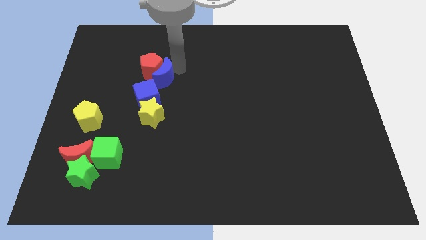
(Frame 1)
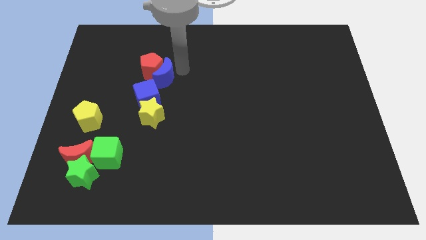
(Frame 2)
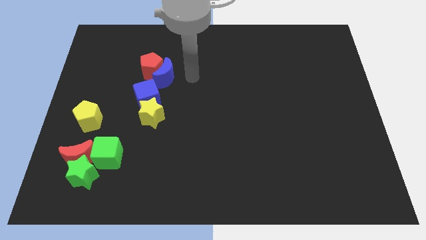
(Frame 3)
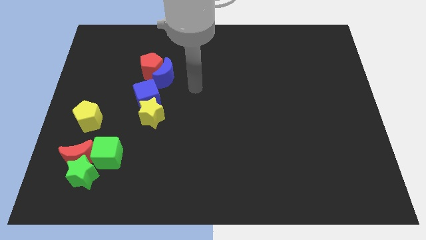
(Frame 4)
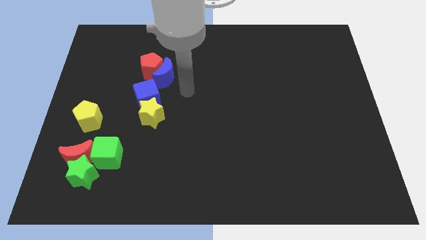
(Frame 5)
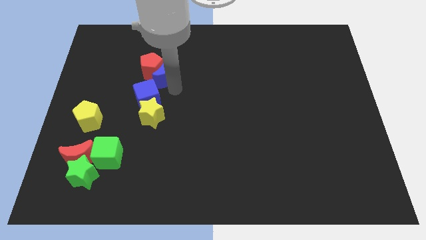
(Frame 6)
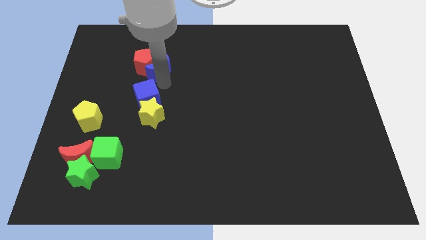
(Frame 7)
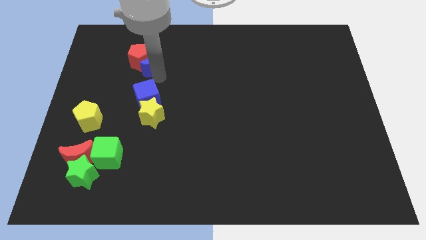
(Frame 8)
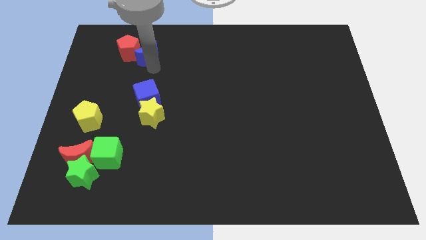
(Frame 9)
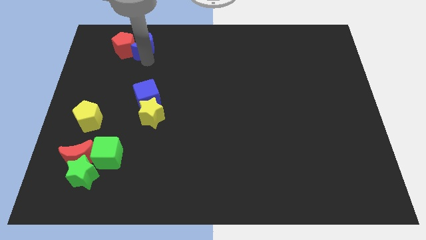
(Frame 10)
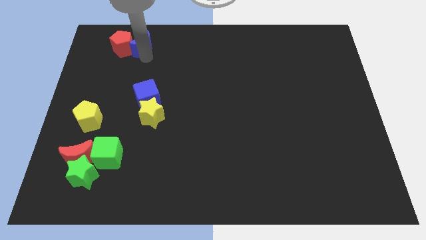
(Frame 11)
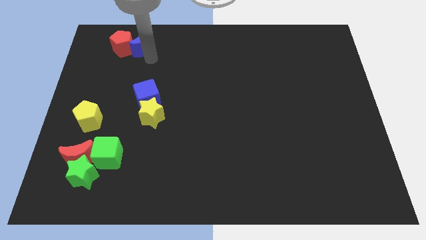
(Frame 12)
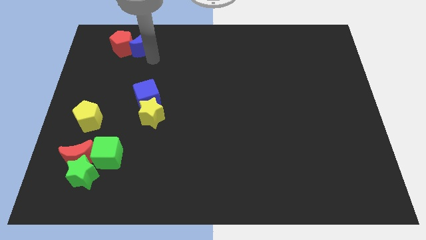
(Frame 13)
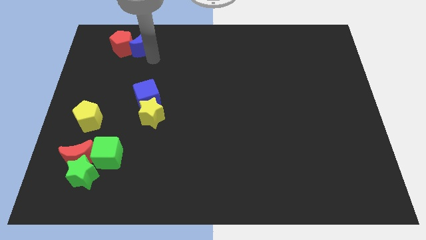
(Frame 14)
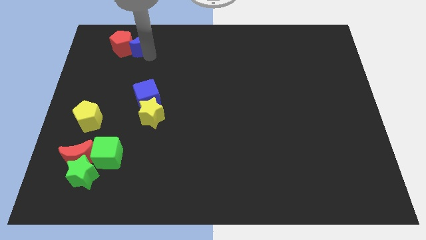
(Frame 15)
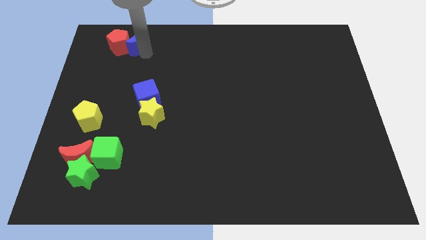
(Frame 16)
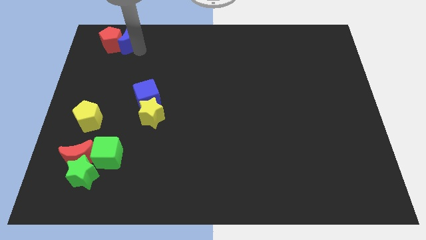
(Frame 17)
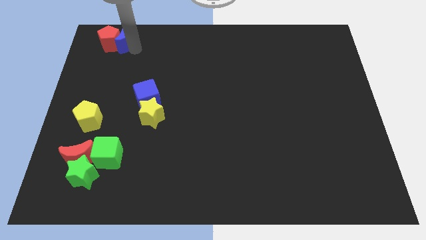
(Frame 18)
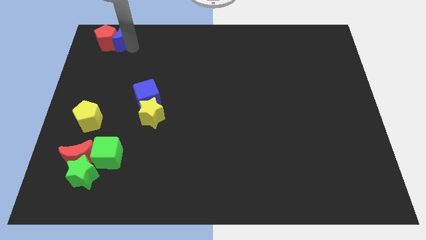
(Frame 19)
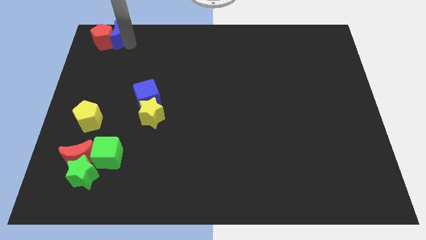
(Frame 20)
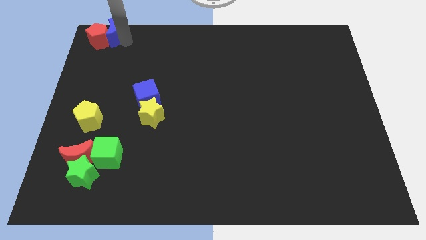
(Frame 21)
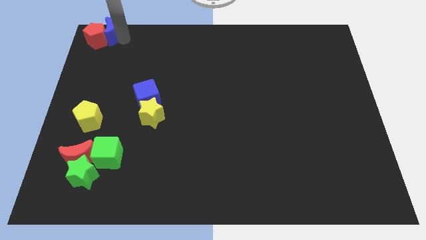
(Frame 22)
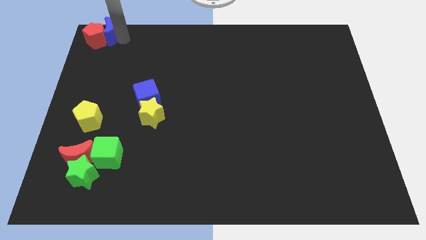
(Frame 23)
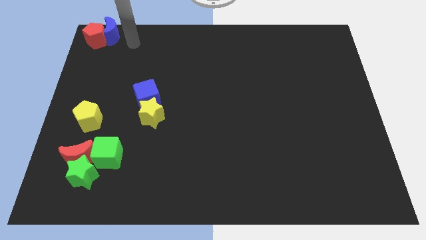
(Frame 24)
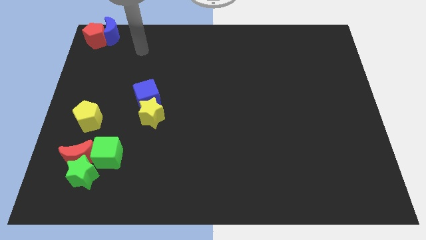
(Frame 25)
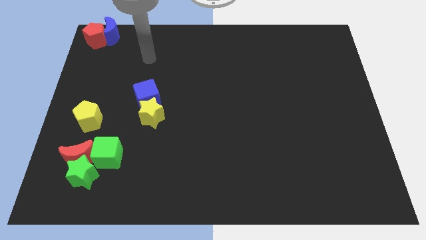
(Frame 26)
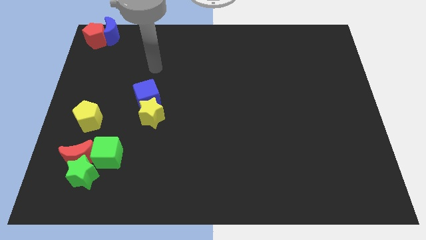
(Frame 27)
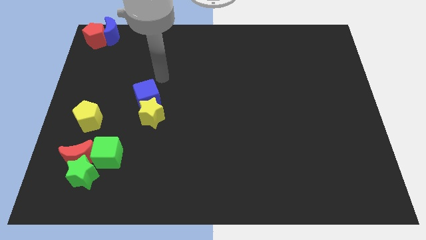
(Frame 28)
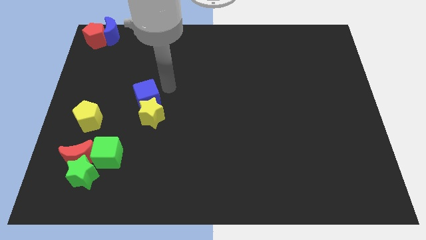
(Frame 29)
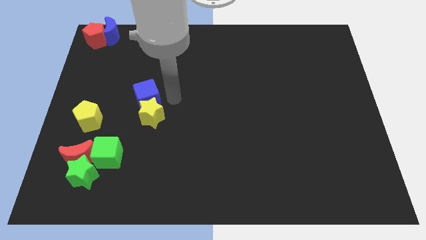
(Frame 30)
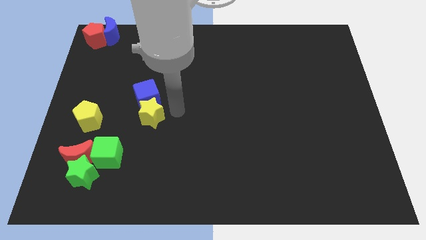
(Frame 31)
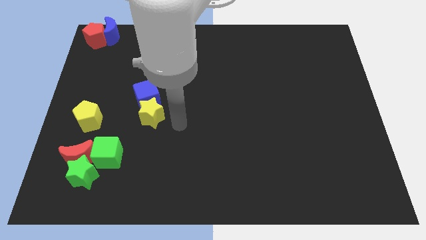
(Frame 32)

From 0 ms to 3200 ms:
put the red pentagon and the blue moon at the top center of the board

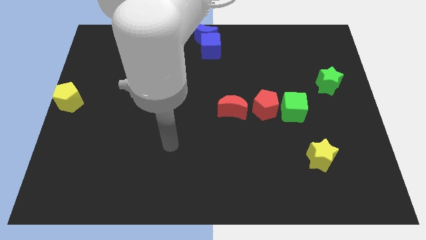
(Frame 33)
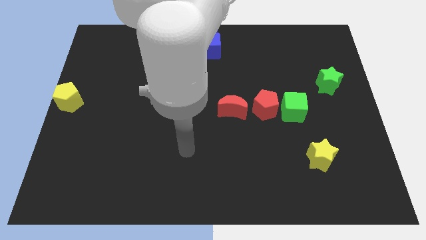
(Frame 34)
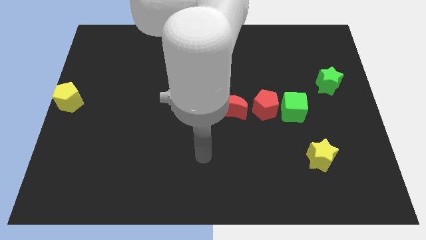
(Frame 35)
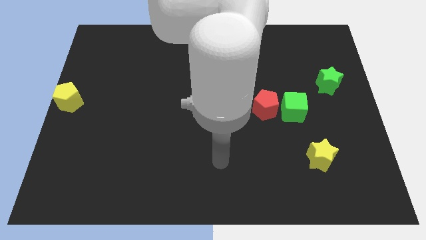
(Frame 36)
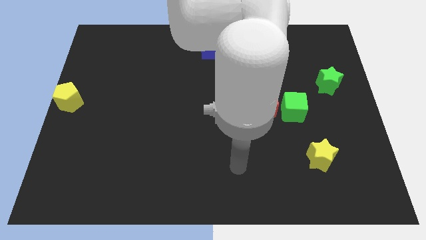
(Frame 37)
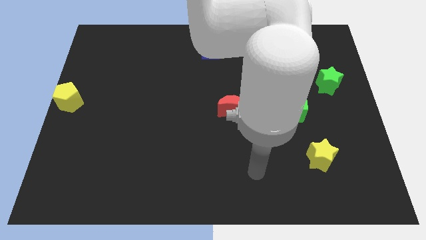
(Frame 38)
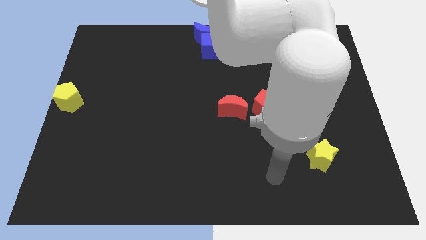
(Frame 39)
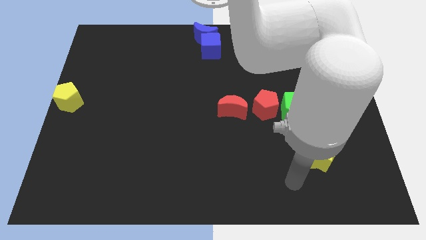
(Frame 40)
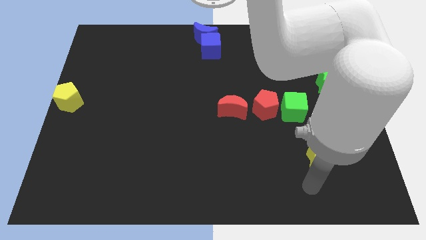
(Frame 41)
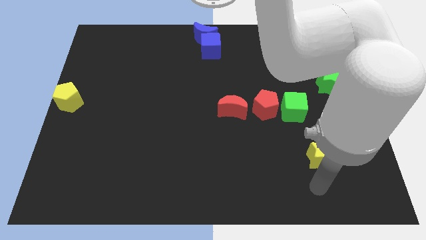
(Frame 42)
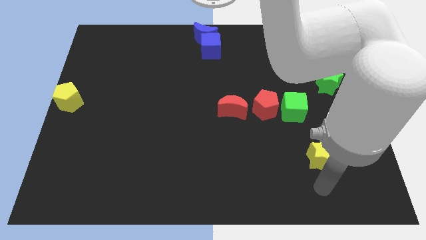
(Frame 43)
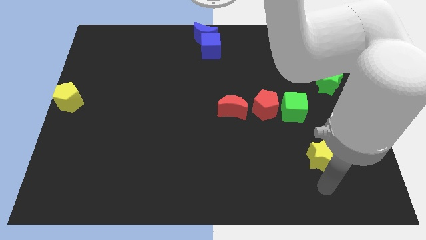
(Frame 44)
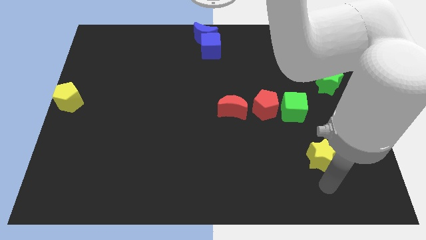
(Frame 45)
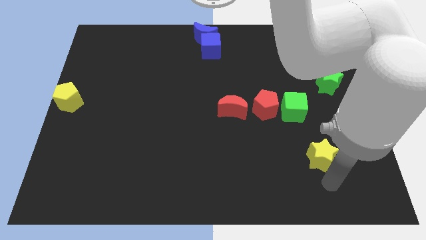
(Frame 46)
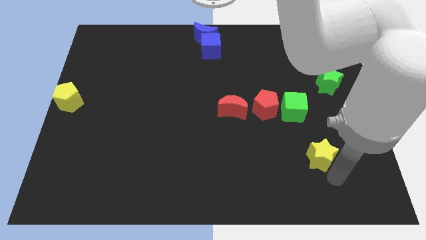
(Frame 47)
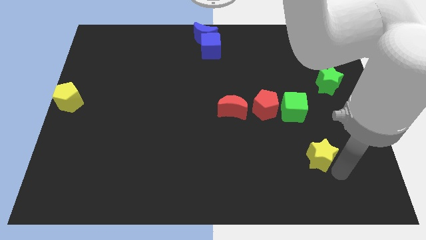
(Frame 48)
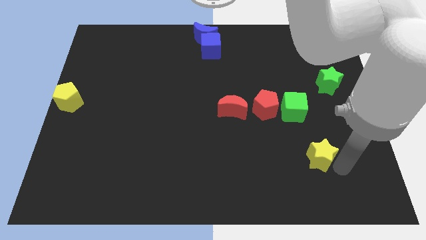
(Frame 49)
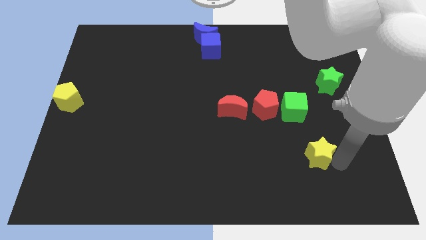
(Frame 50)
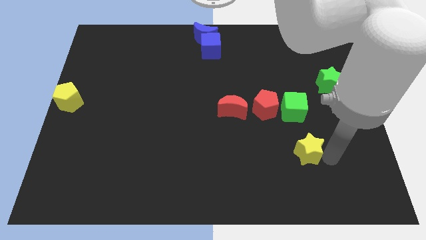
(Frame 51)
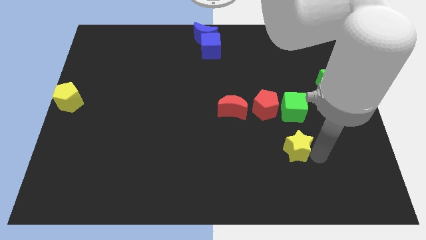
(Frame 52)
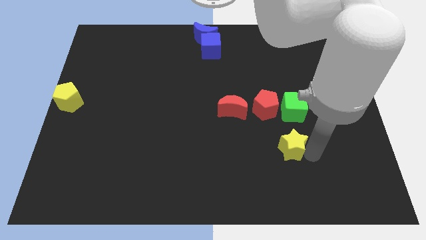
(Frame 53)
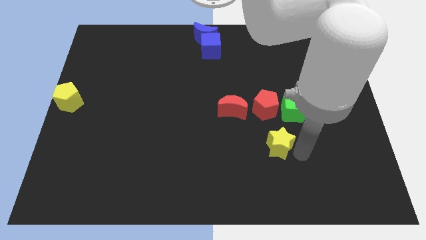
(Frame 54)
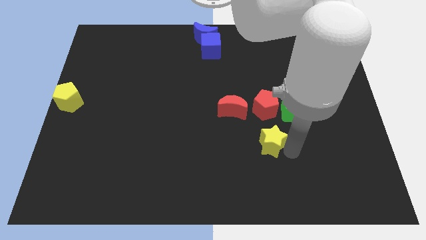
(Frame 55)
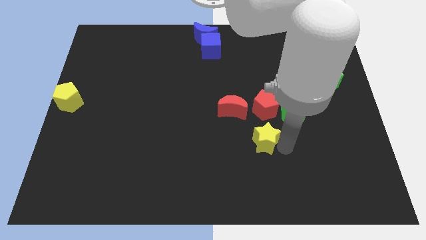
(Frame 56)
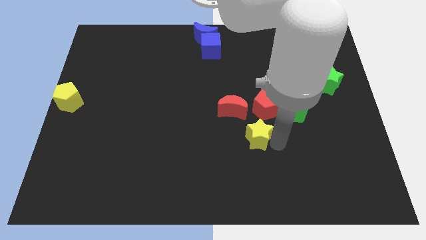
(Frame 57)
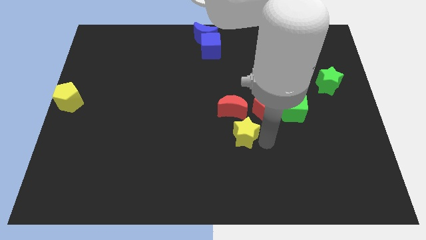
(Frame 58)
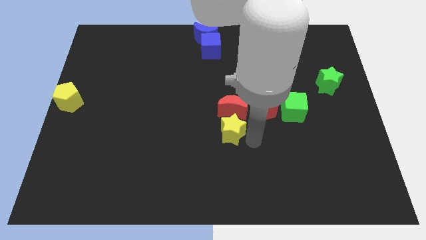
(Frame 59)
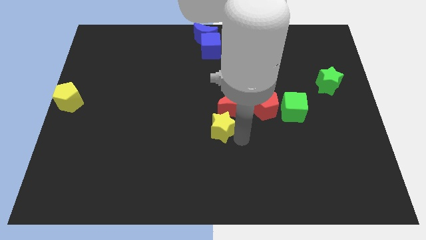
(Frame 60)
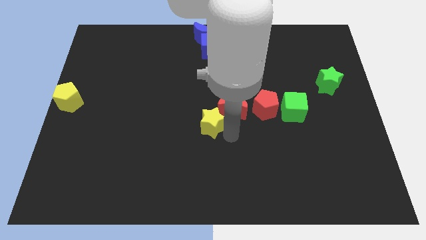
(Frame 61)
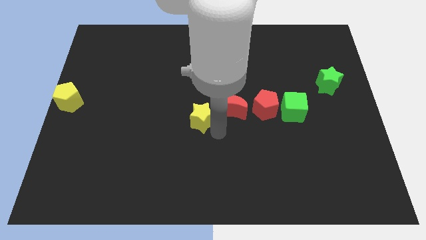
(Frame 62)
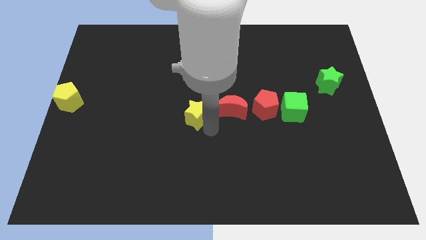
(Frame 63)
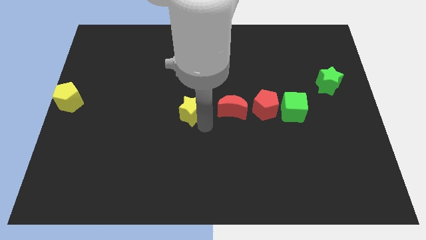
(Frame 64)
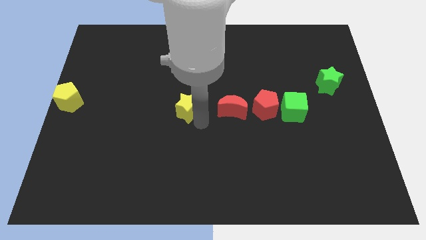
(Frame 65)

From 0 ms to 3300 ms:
put the yellow star on the left side of the red moon

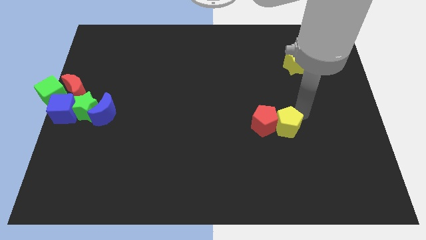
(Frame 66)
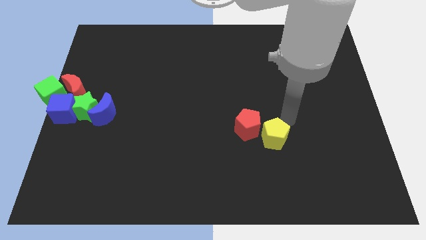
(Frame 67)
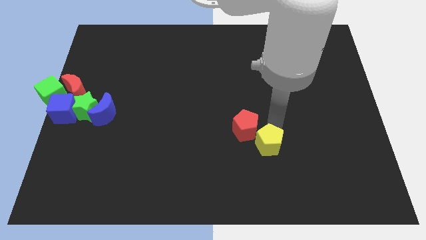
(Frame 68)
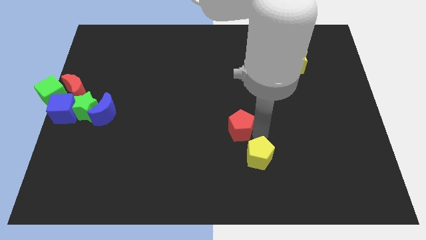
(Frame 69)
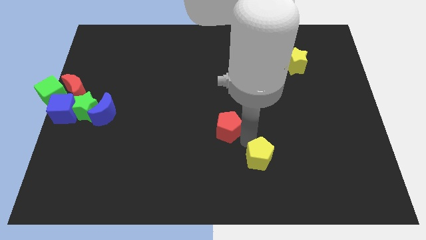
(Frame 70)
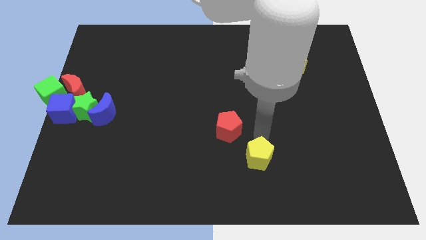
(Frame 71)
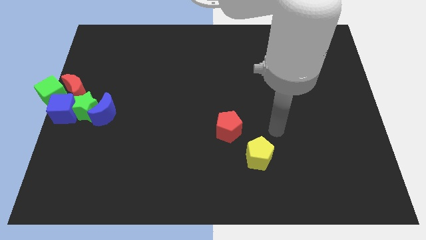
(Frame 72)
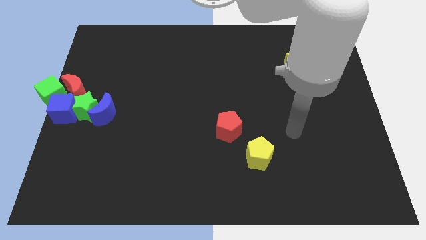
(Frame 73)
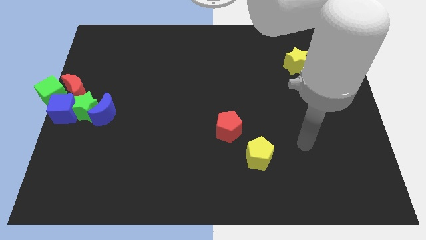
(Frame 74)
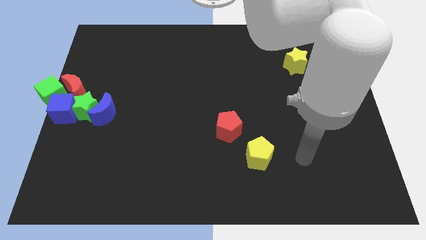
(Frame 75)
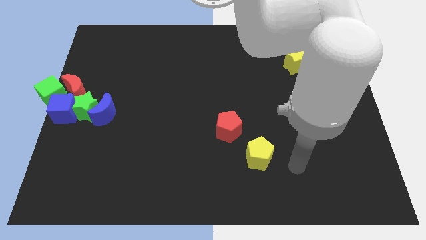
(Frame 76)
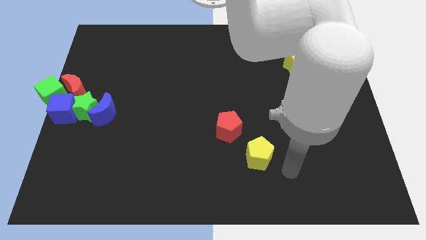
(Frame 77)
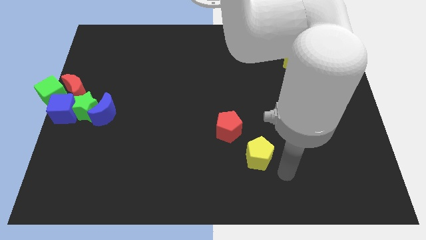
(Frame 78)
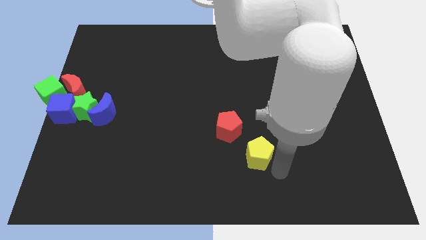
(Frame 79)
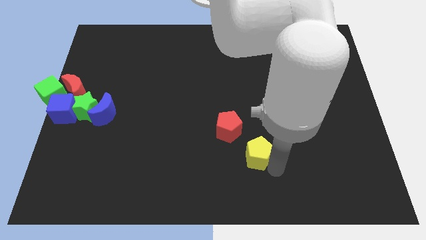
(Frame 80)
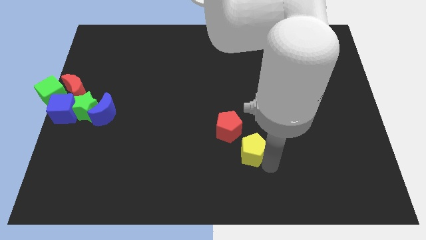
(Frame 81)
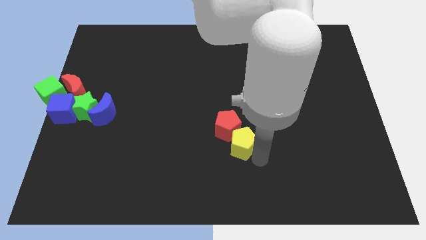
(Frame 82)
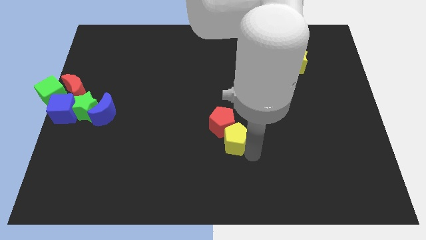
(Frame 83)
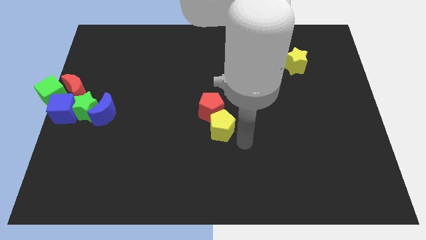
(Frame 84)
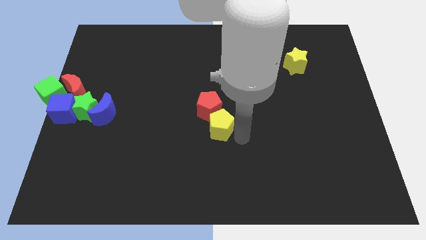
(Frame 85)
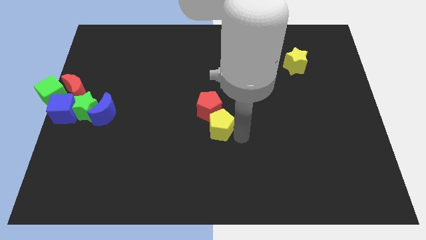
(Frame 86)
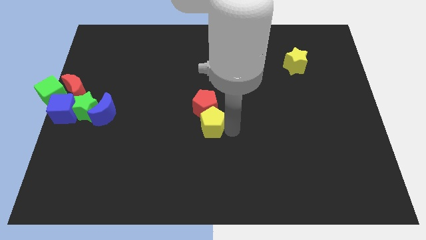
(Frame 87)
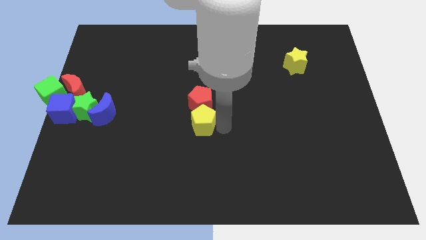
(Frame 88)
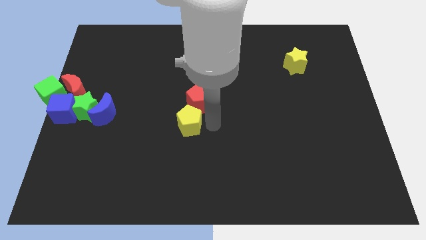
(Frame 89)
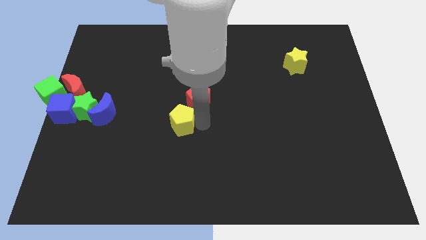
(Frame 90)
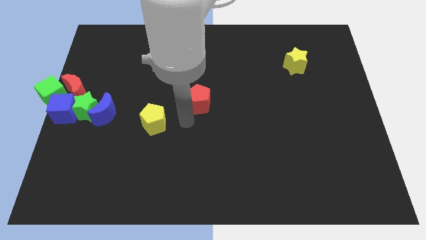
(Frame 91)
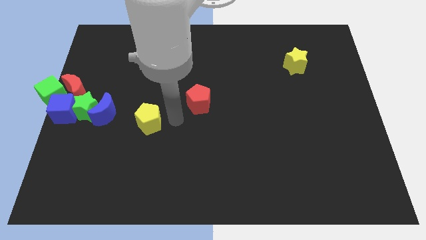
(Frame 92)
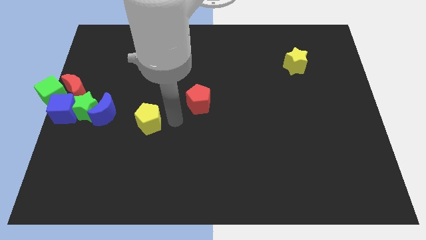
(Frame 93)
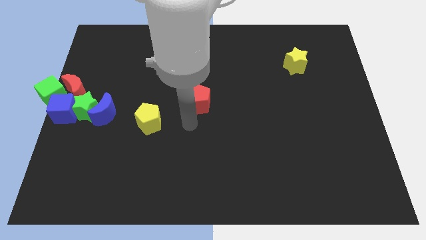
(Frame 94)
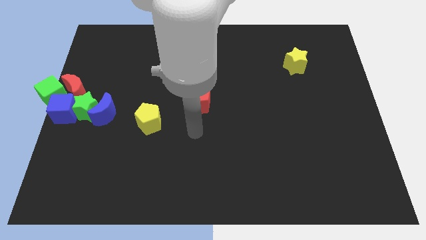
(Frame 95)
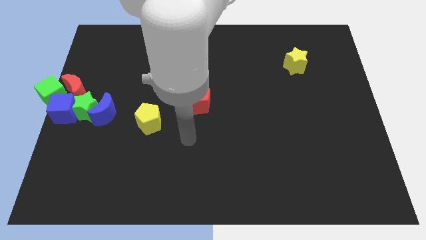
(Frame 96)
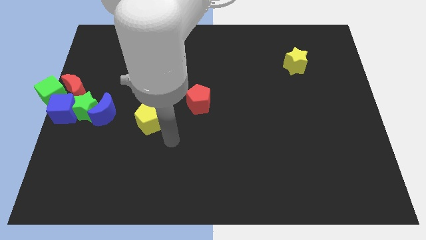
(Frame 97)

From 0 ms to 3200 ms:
separate the yellow pentagon from red pentagon
